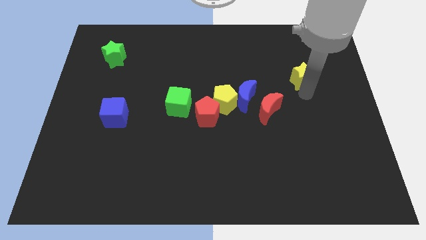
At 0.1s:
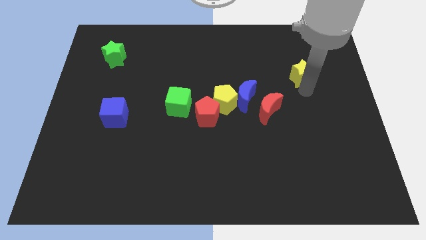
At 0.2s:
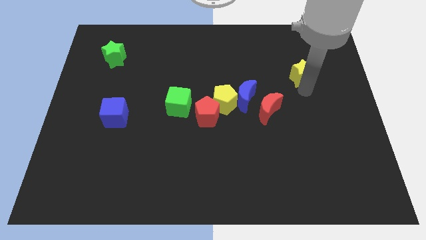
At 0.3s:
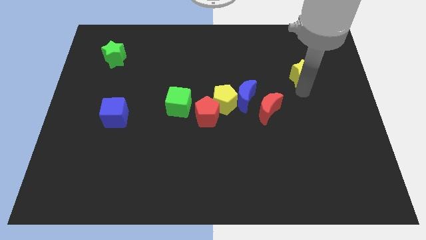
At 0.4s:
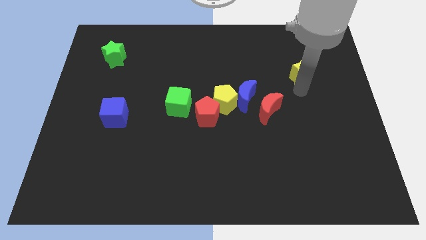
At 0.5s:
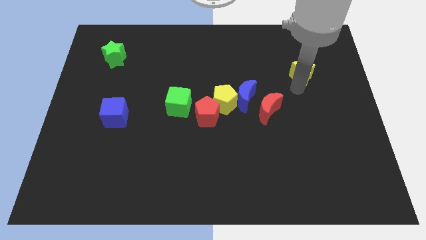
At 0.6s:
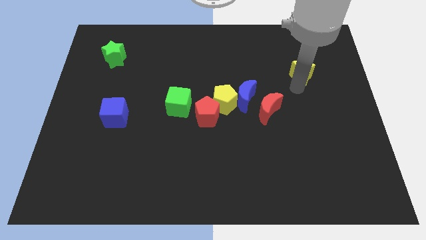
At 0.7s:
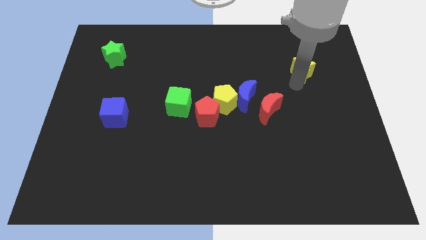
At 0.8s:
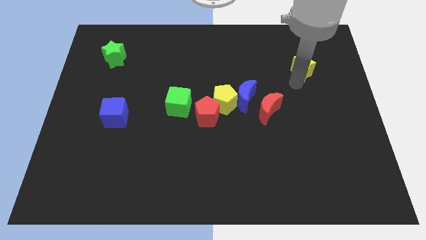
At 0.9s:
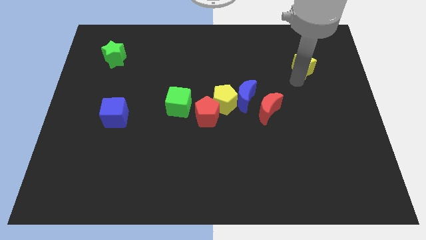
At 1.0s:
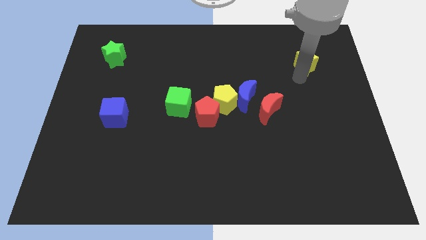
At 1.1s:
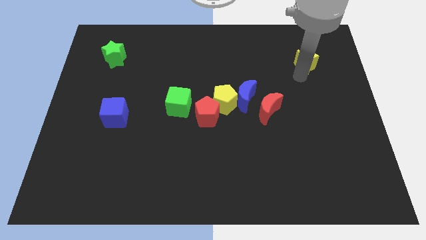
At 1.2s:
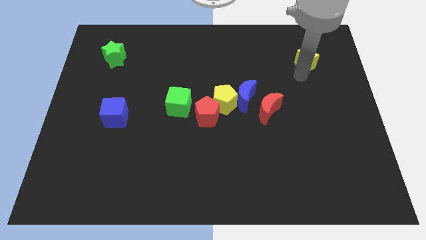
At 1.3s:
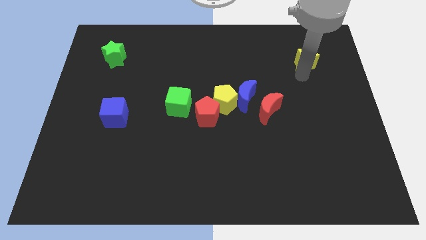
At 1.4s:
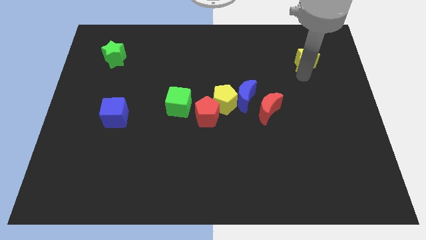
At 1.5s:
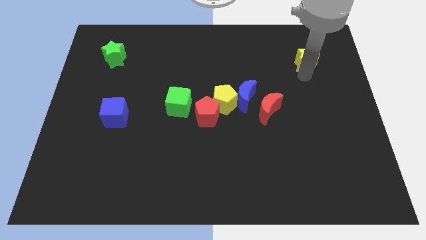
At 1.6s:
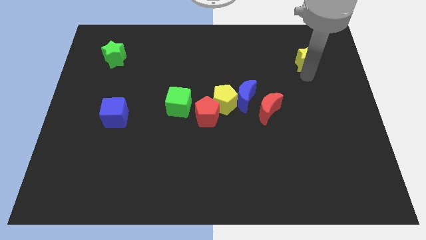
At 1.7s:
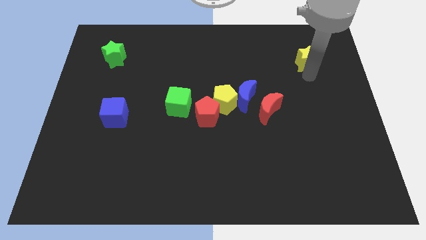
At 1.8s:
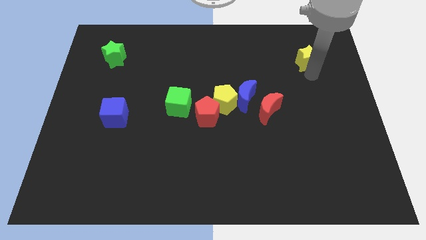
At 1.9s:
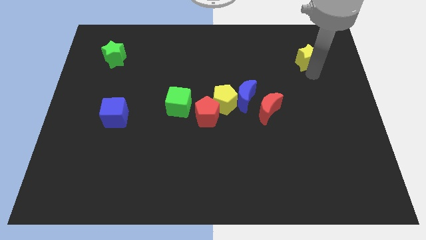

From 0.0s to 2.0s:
push the yellow star towards the top left side of the board

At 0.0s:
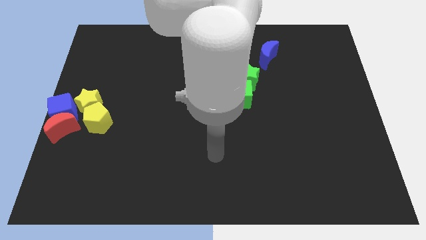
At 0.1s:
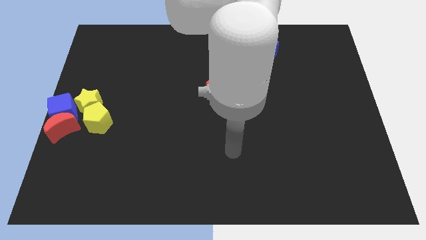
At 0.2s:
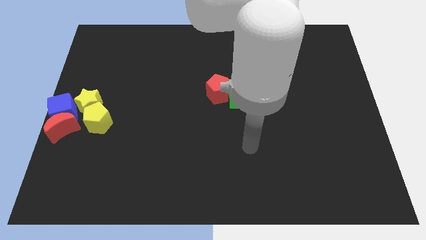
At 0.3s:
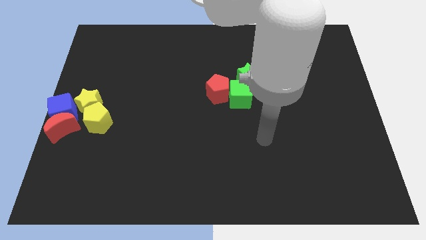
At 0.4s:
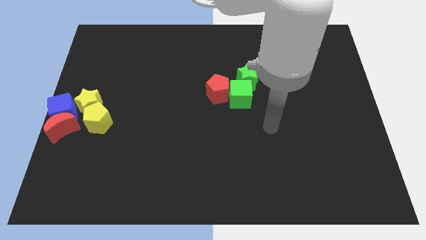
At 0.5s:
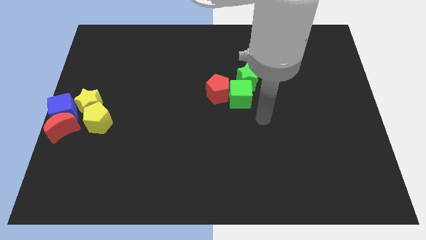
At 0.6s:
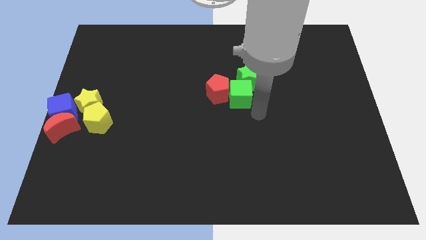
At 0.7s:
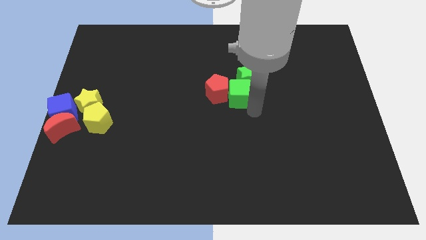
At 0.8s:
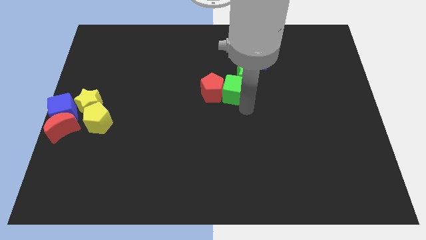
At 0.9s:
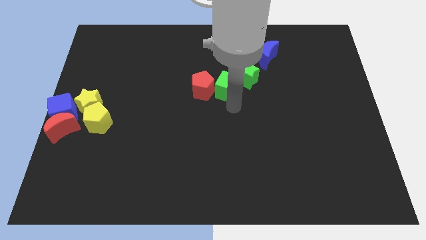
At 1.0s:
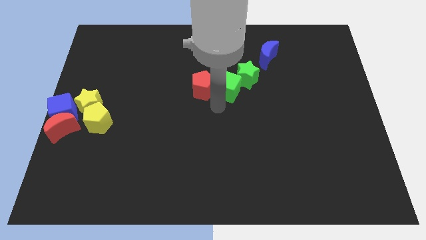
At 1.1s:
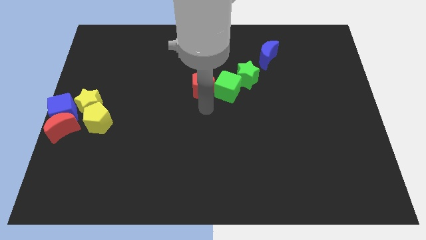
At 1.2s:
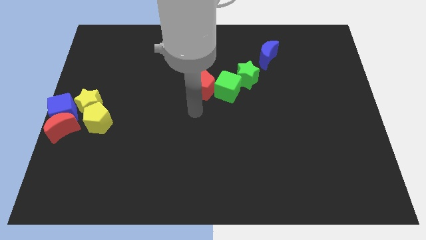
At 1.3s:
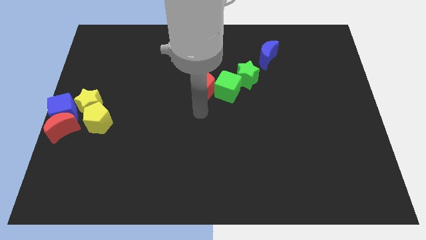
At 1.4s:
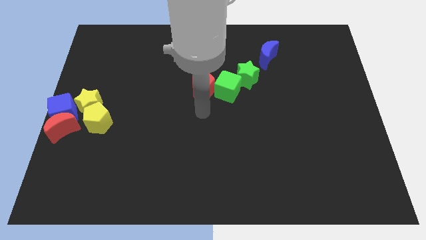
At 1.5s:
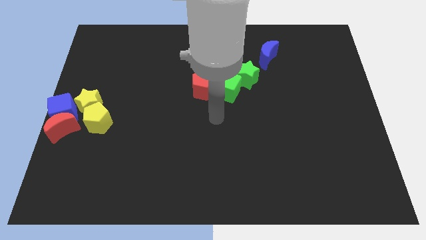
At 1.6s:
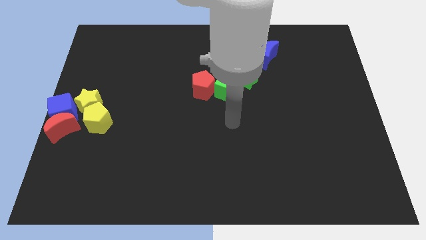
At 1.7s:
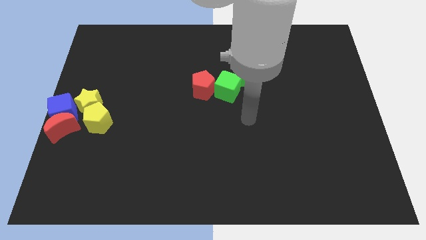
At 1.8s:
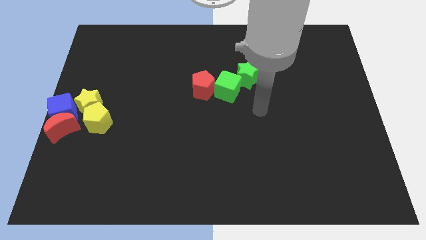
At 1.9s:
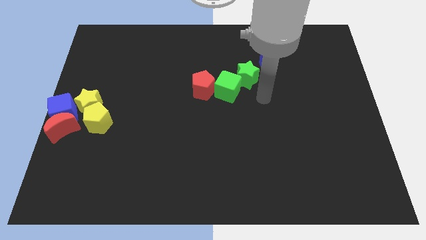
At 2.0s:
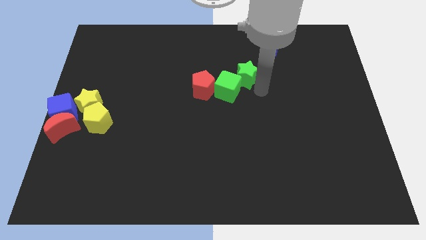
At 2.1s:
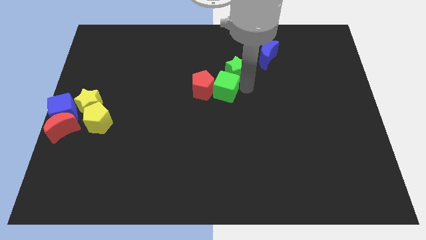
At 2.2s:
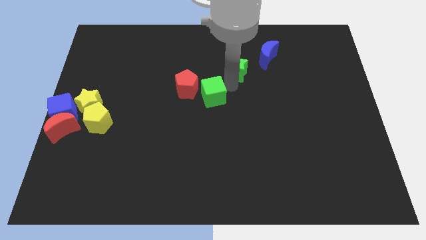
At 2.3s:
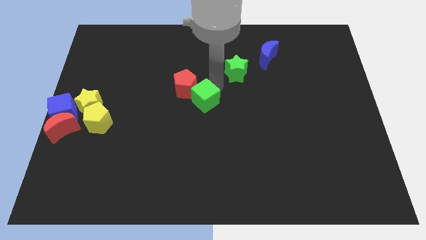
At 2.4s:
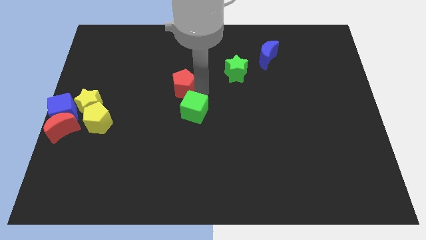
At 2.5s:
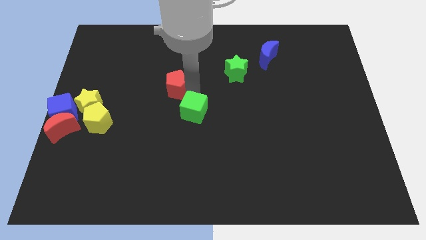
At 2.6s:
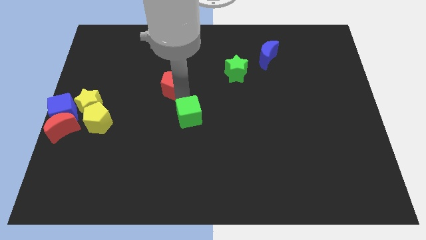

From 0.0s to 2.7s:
separate the green cube and green star

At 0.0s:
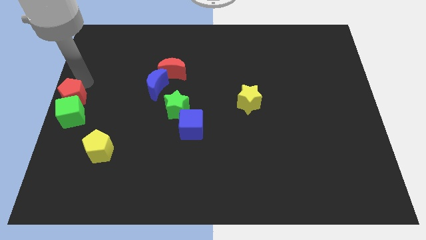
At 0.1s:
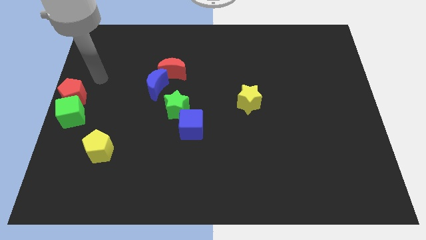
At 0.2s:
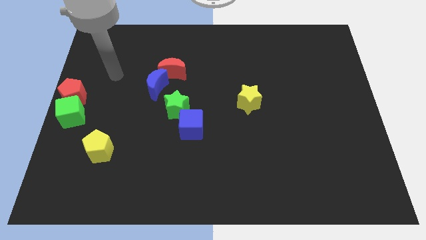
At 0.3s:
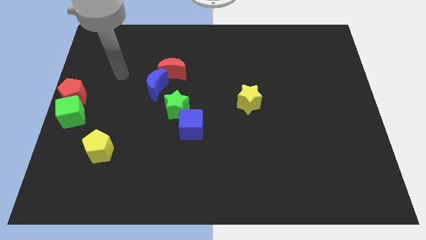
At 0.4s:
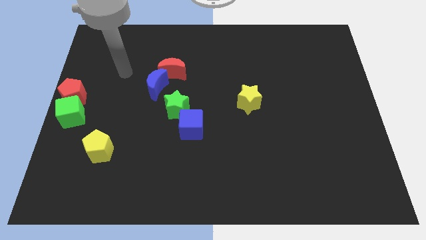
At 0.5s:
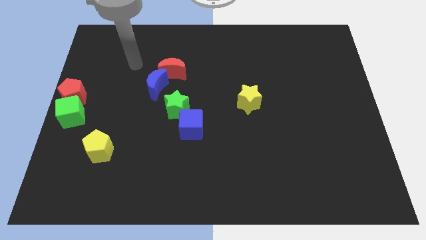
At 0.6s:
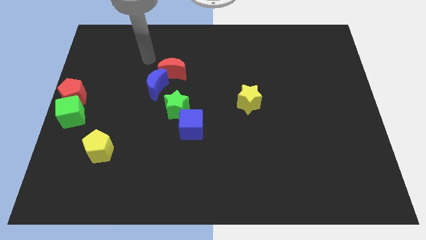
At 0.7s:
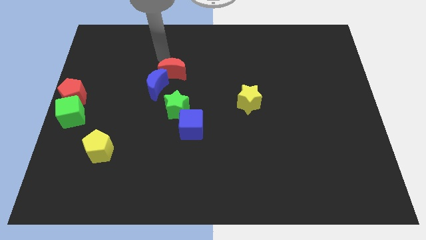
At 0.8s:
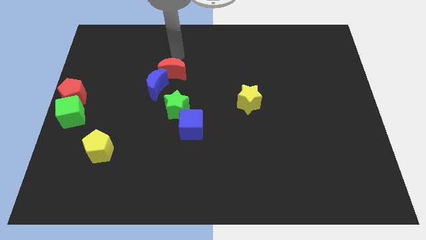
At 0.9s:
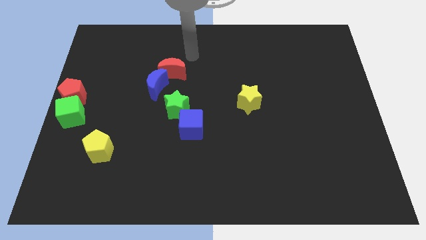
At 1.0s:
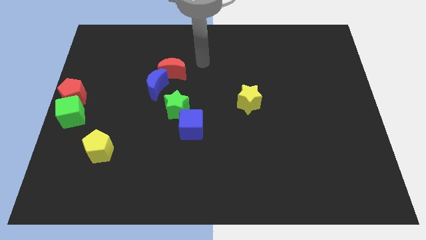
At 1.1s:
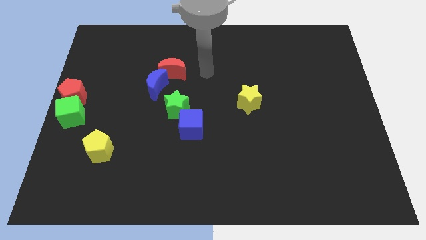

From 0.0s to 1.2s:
move the arm away from the red pentagon

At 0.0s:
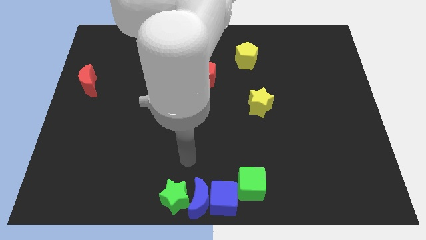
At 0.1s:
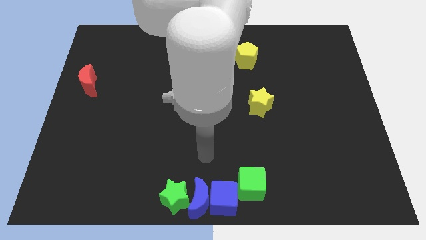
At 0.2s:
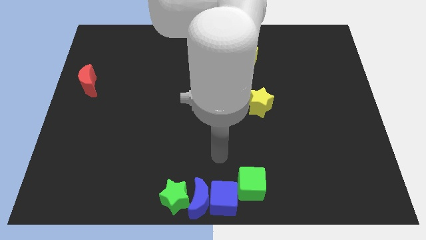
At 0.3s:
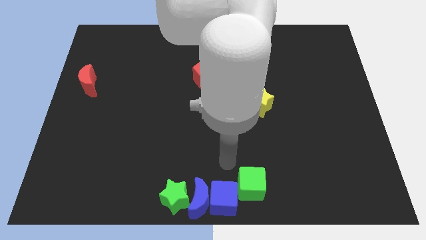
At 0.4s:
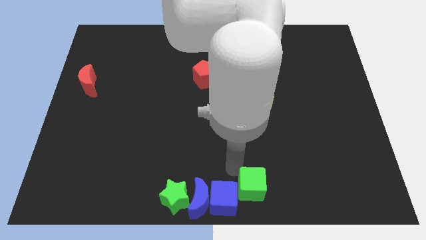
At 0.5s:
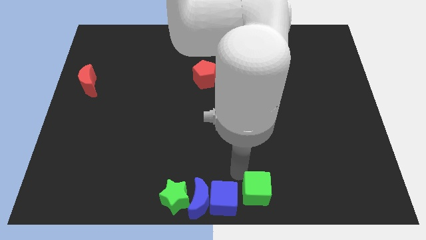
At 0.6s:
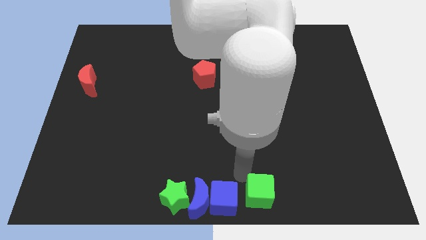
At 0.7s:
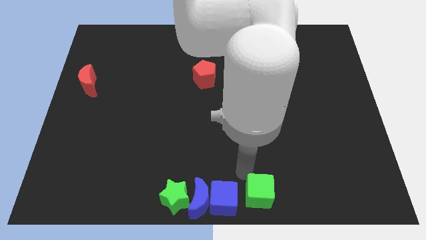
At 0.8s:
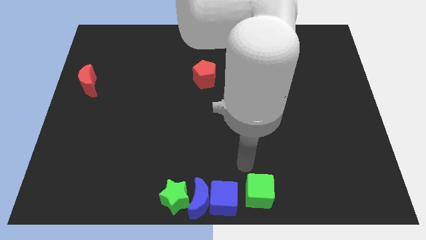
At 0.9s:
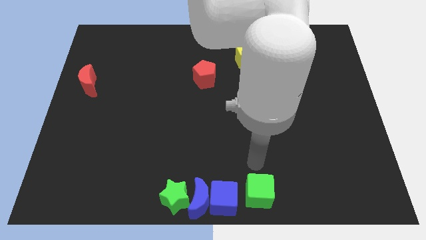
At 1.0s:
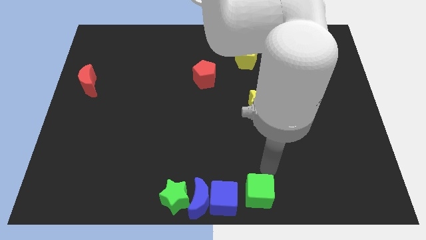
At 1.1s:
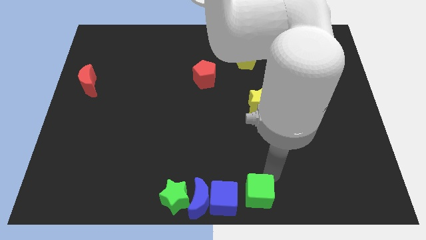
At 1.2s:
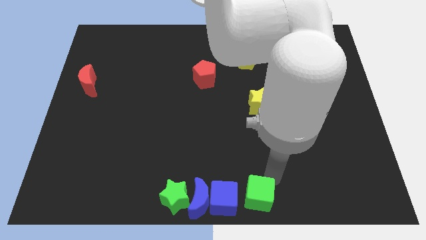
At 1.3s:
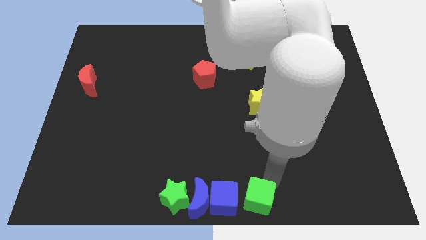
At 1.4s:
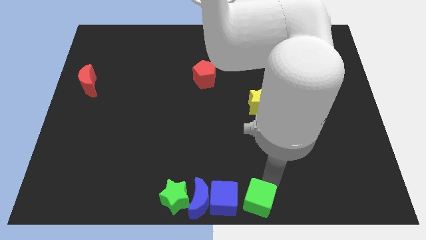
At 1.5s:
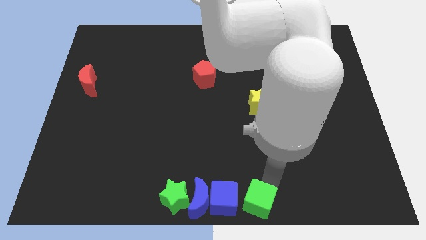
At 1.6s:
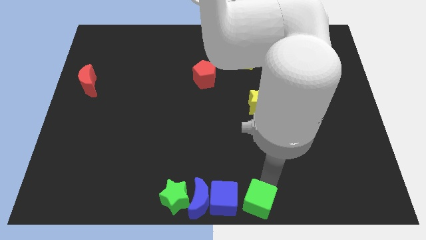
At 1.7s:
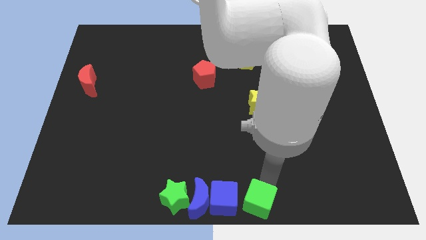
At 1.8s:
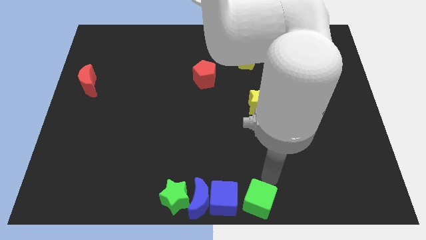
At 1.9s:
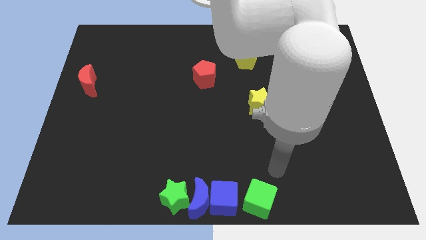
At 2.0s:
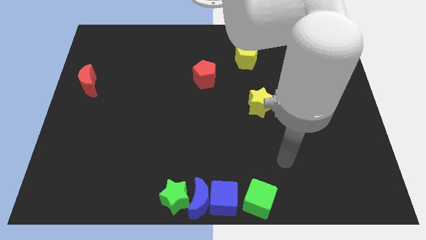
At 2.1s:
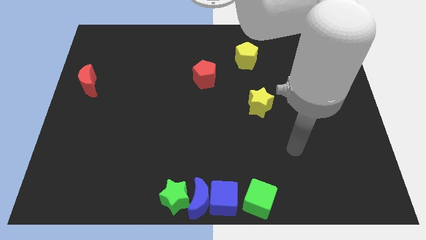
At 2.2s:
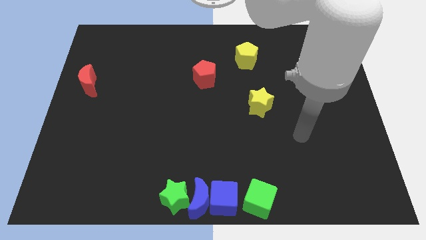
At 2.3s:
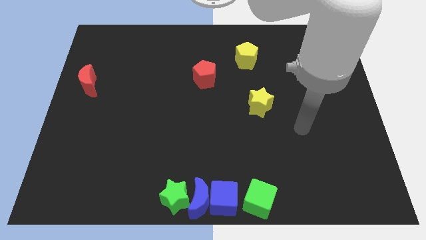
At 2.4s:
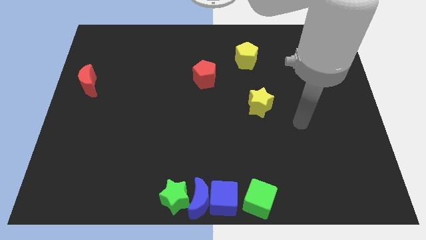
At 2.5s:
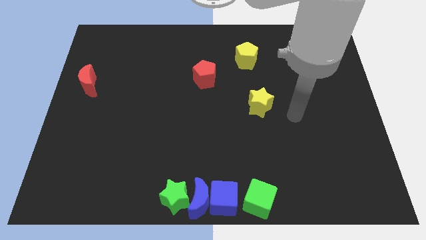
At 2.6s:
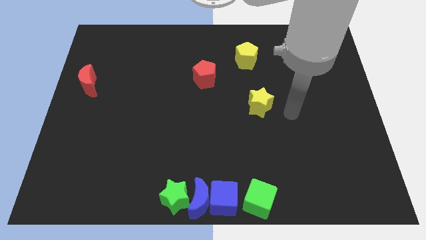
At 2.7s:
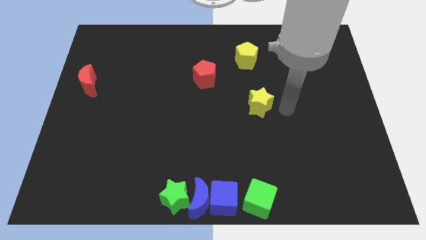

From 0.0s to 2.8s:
slide the green cube downward

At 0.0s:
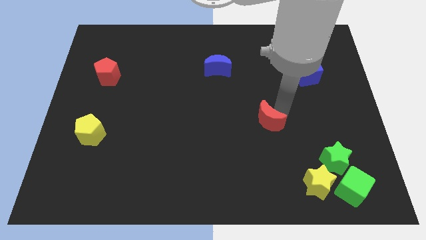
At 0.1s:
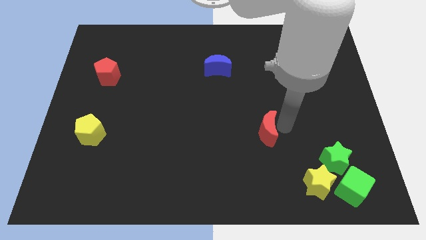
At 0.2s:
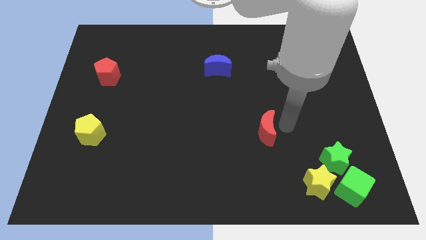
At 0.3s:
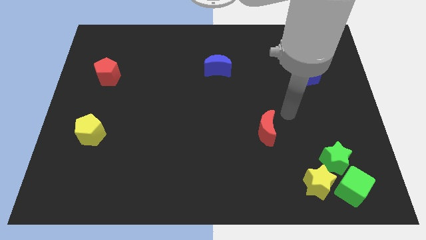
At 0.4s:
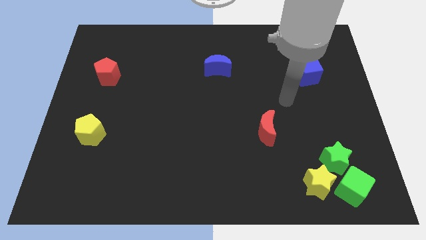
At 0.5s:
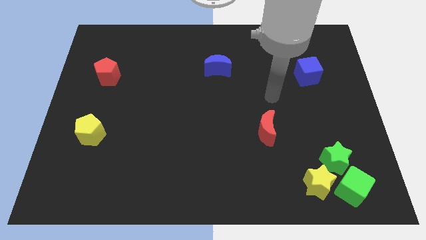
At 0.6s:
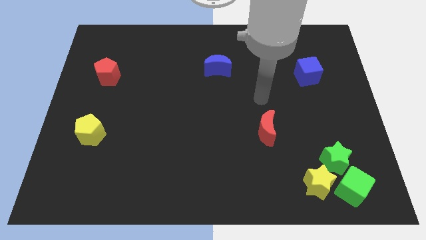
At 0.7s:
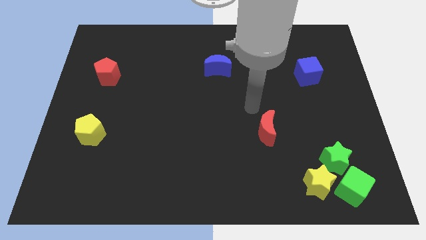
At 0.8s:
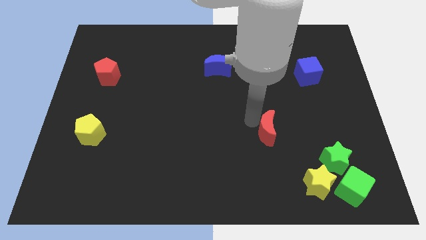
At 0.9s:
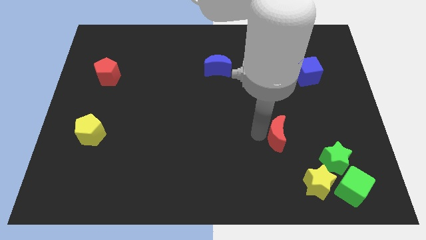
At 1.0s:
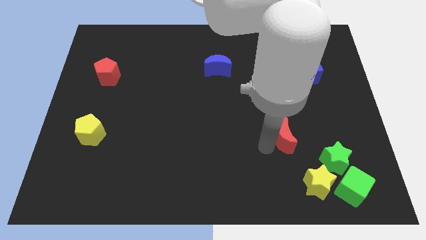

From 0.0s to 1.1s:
slightly push the red crescent towards the group of blocks
